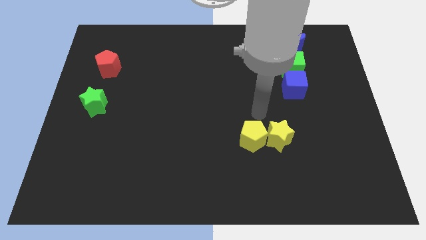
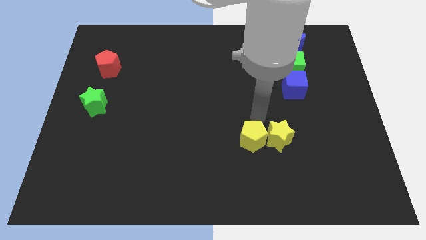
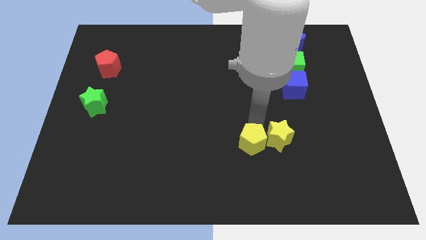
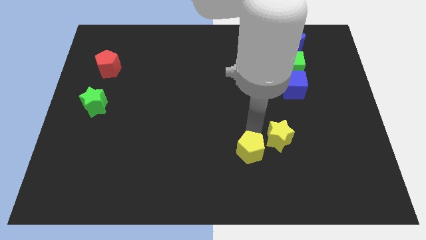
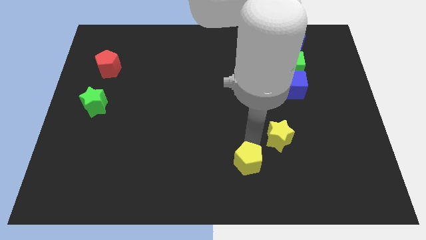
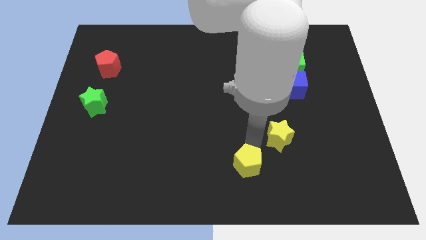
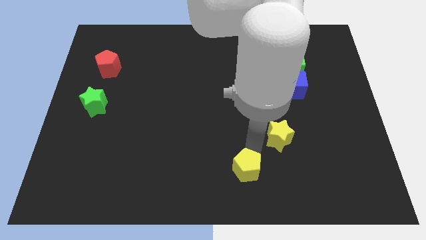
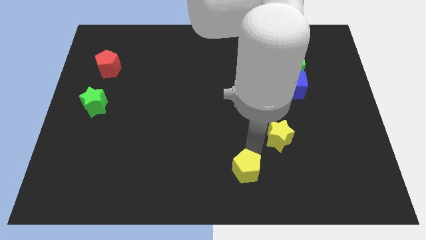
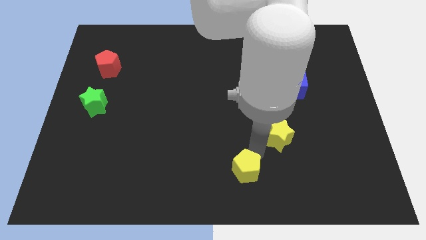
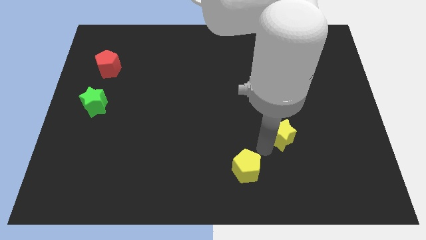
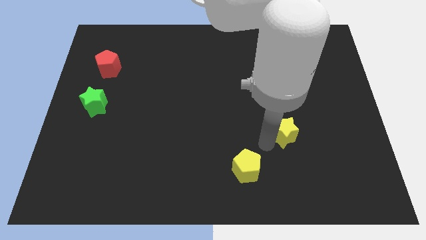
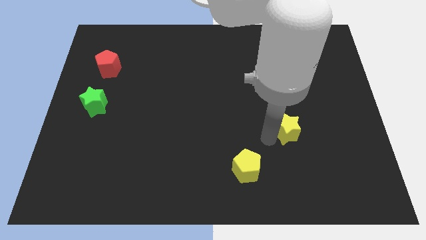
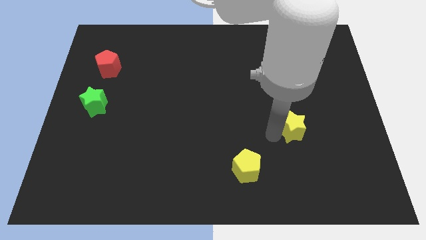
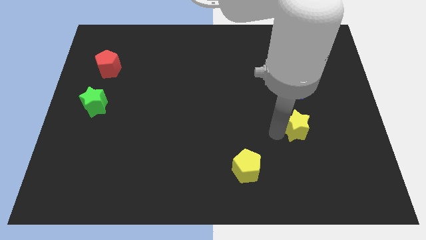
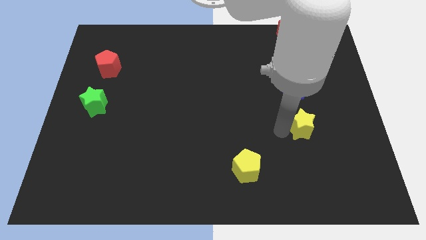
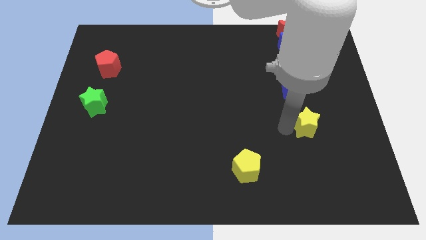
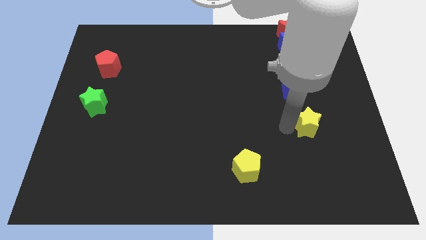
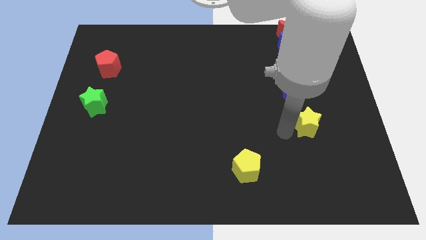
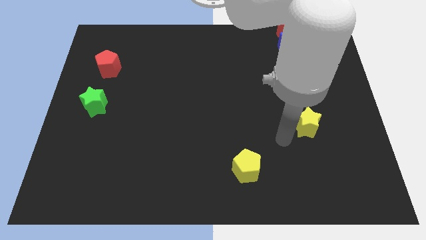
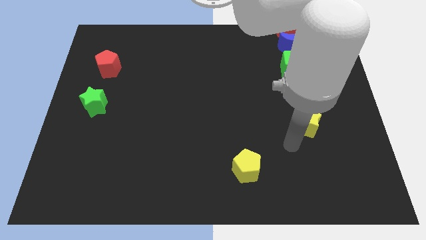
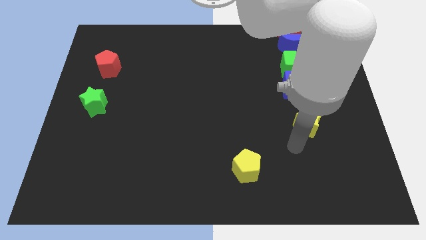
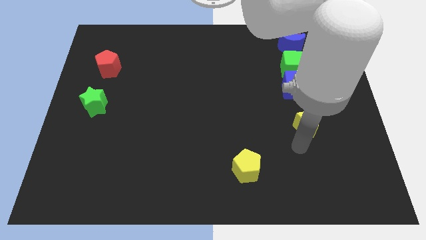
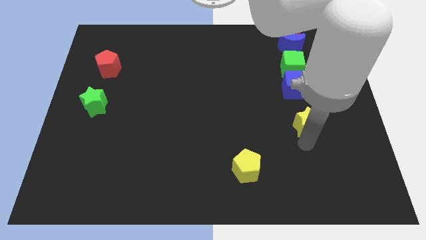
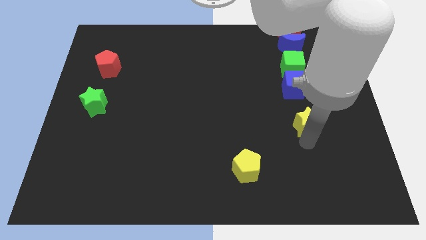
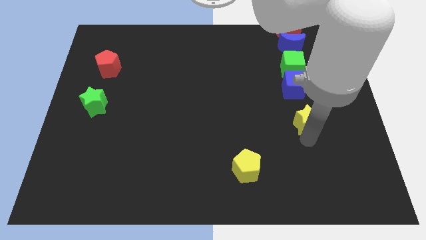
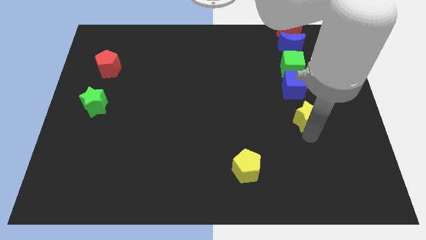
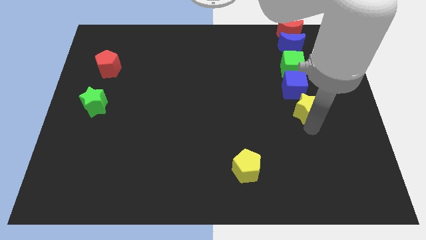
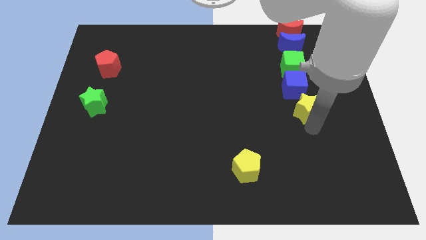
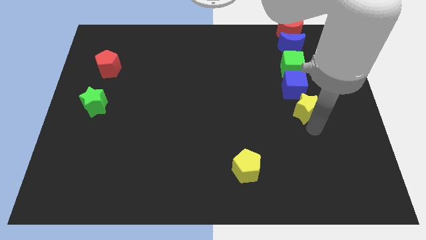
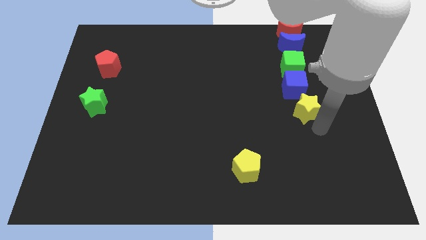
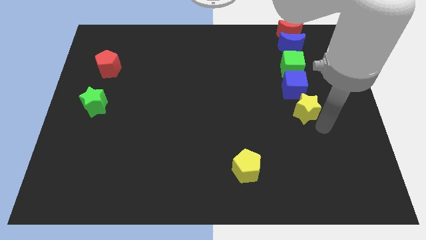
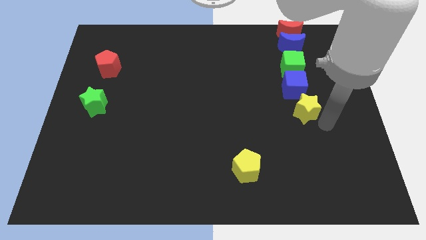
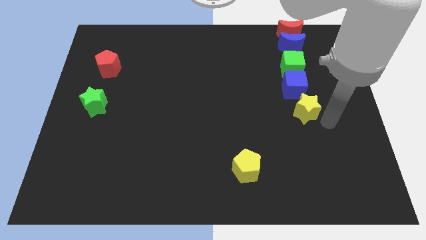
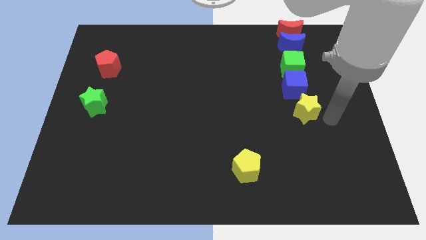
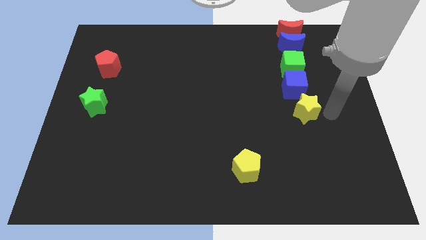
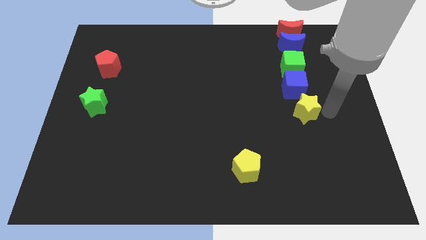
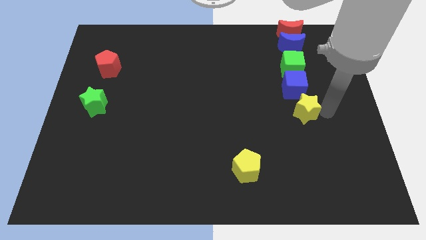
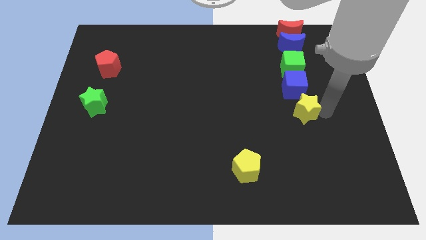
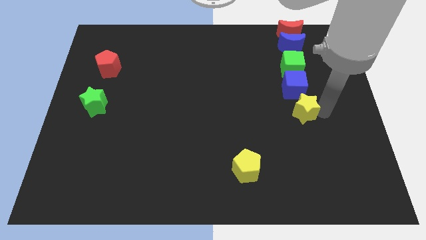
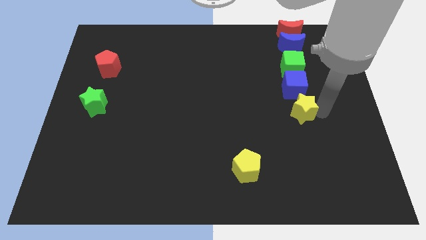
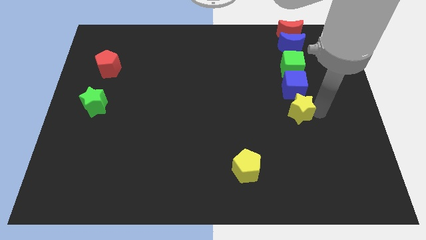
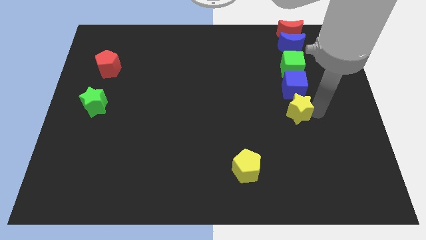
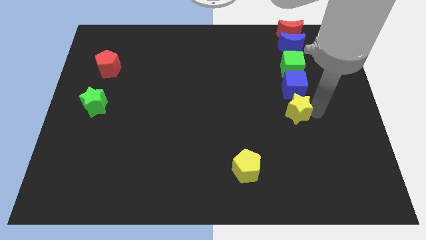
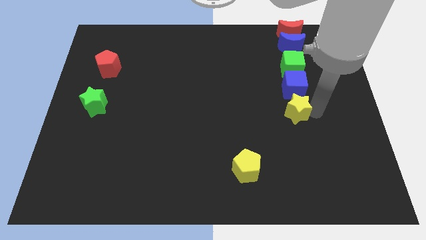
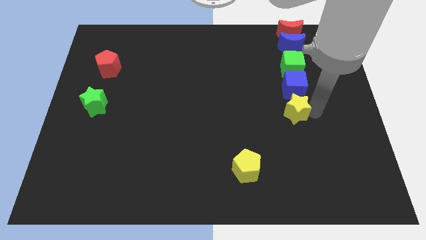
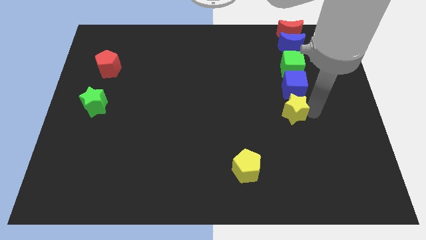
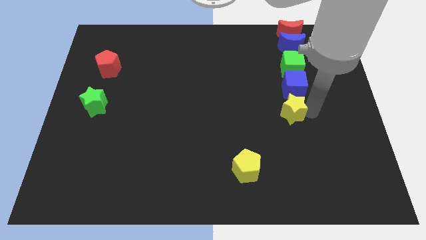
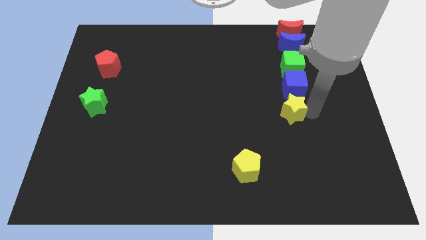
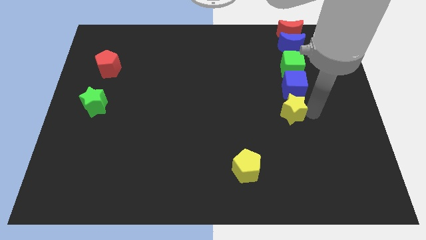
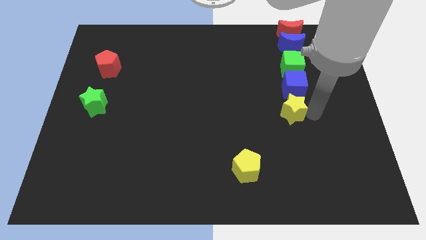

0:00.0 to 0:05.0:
move the yellow star to the bottom of the blue cube

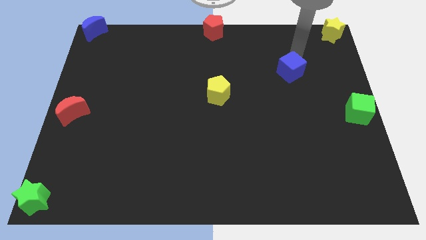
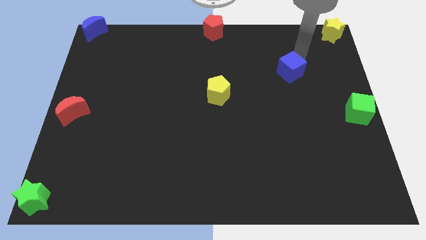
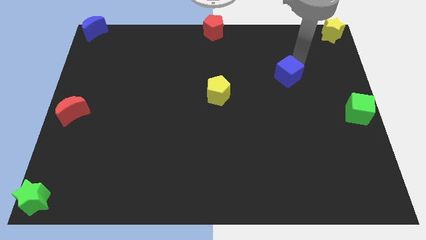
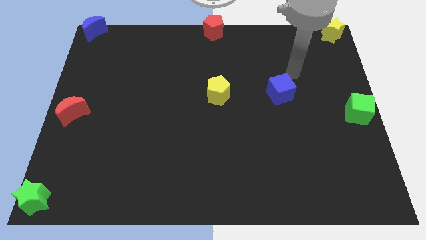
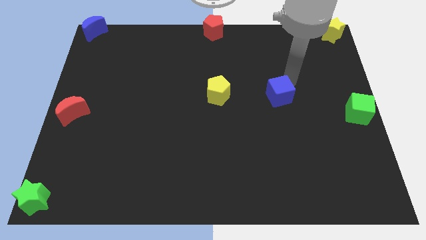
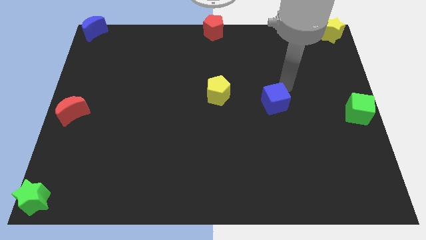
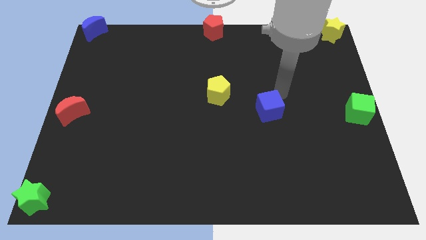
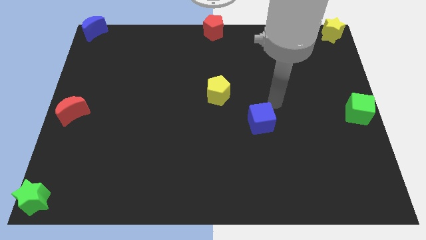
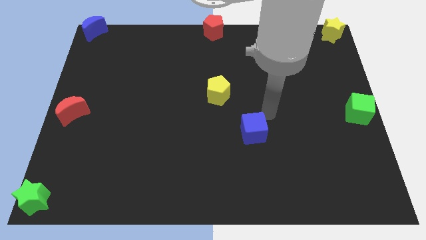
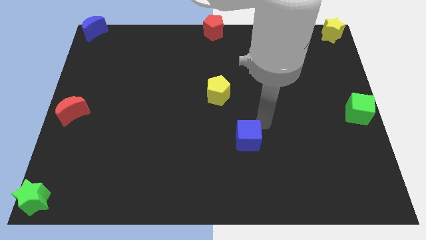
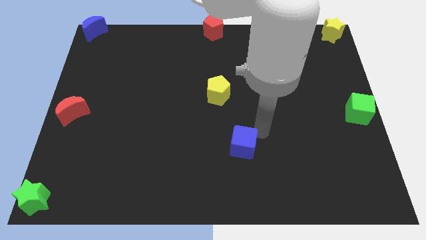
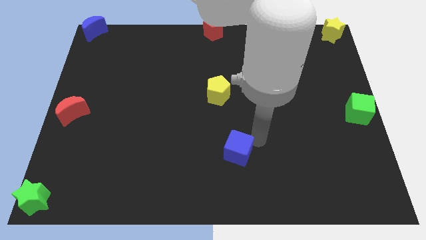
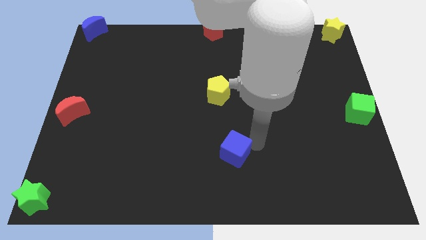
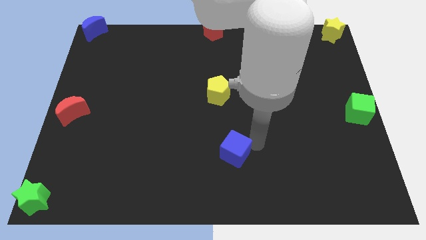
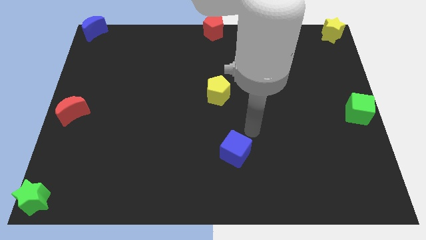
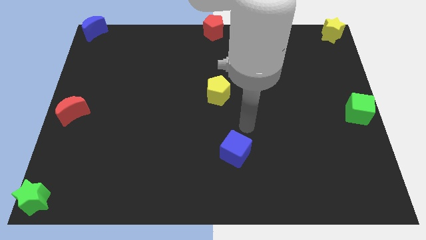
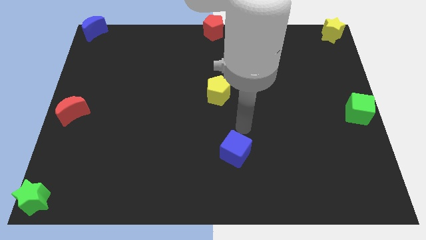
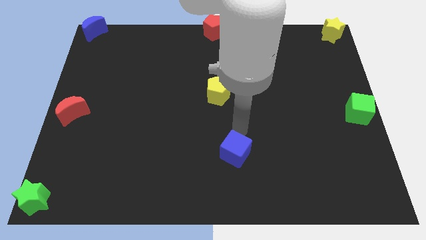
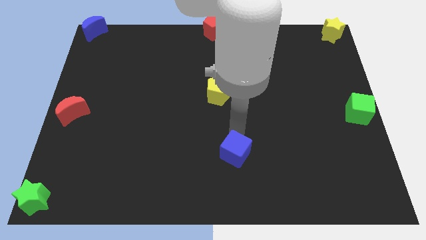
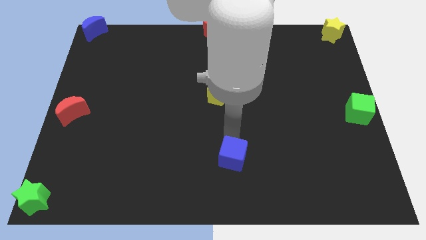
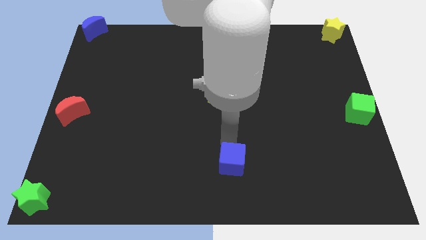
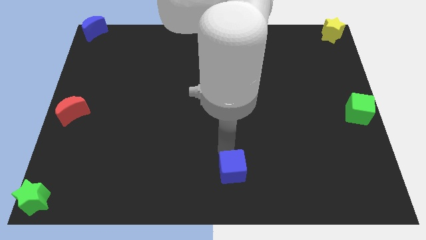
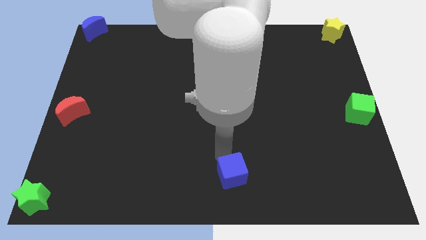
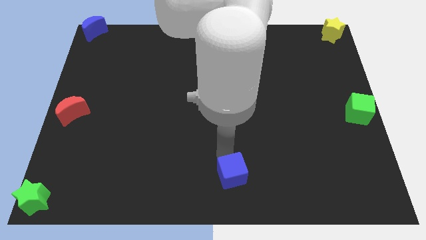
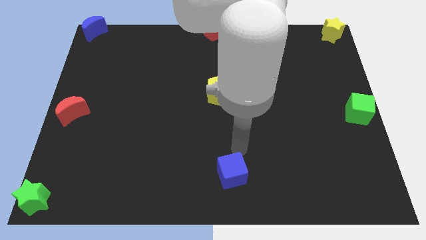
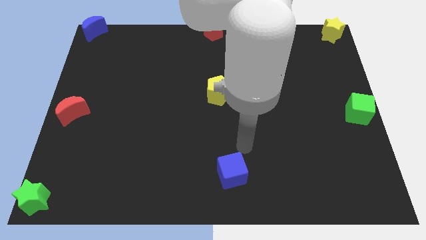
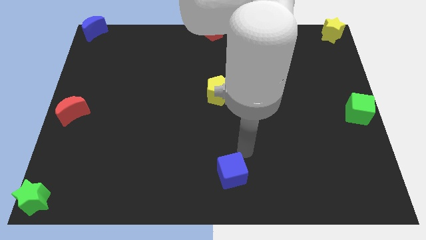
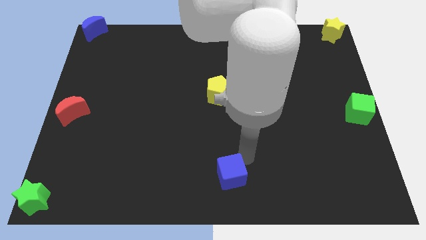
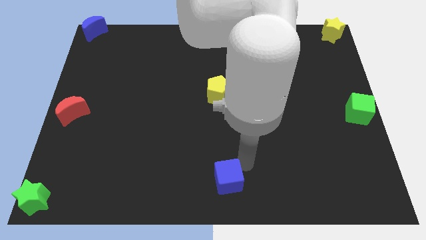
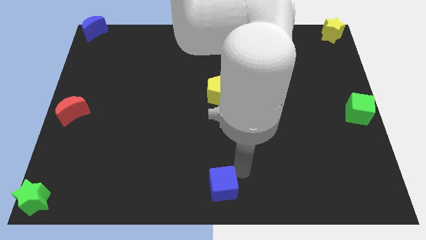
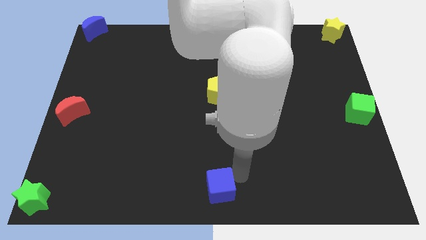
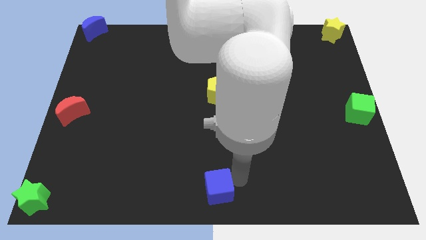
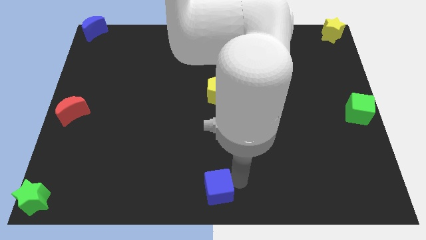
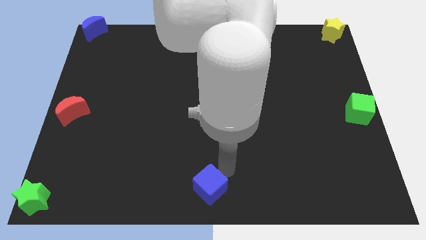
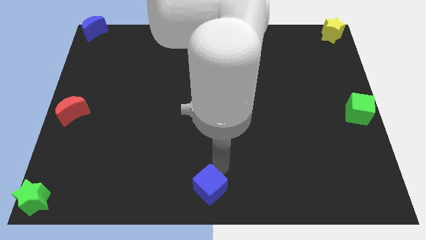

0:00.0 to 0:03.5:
push the blue cube to the bottom center of the board

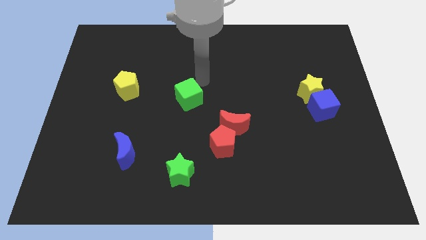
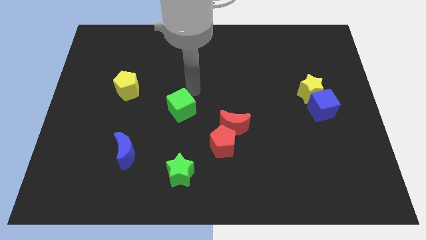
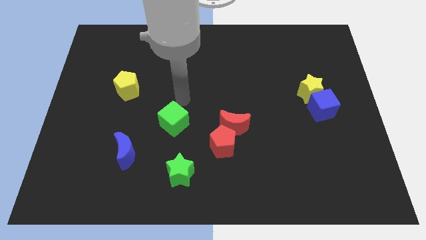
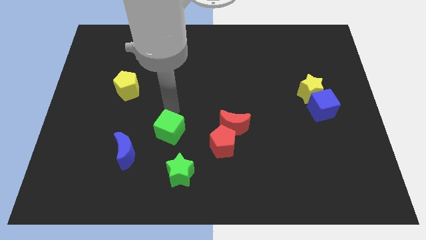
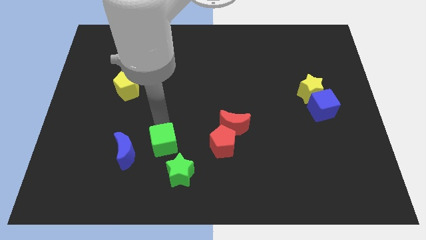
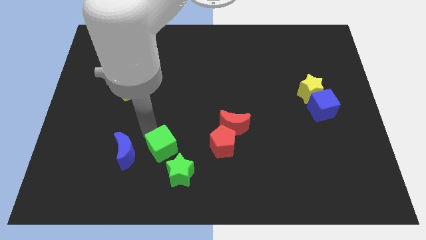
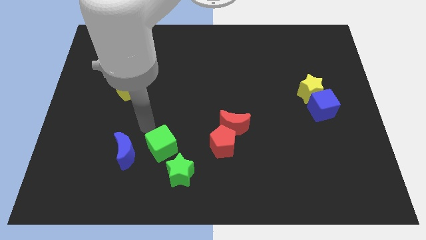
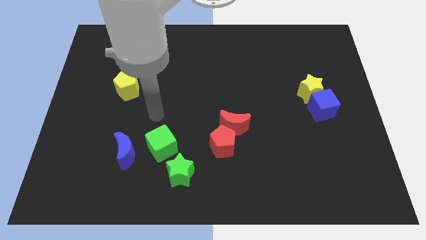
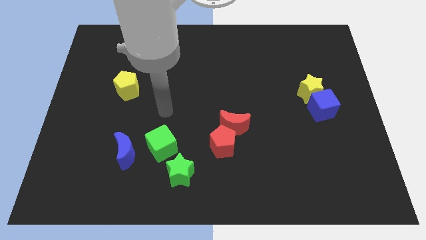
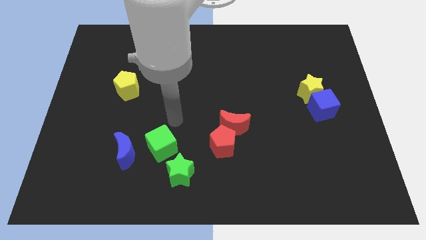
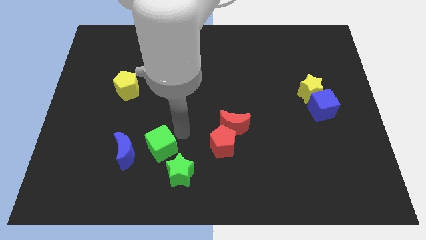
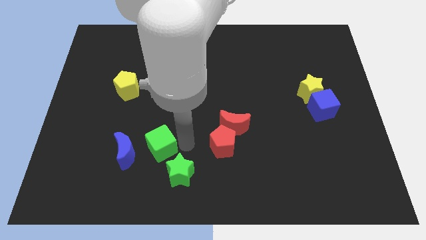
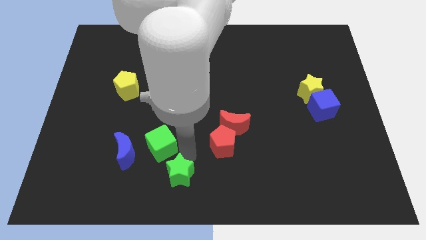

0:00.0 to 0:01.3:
place the green cube at the top of green star
